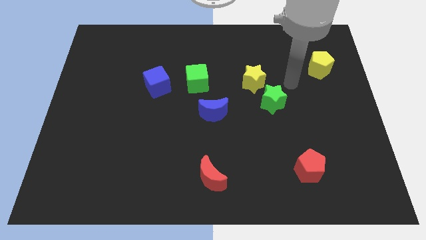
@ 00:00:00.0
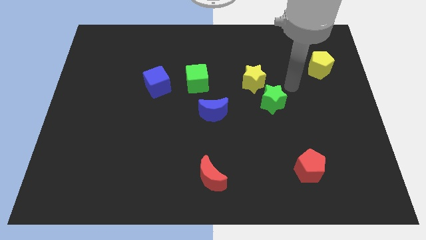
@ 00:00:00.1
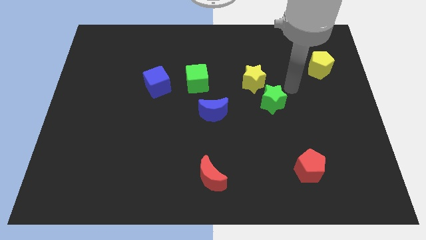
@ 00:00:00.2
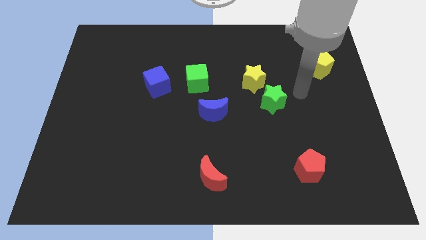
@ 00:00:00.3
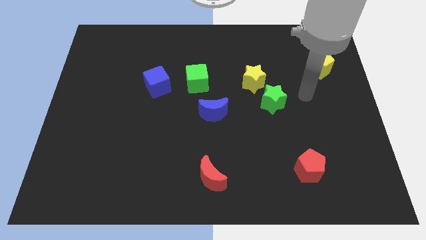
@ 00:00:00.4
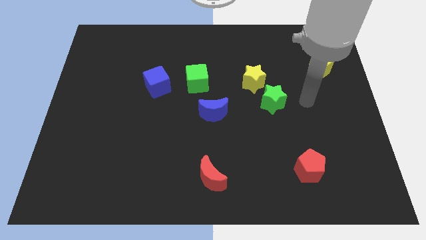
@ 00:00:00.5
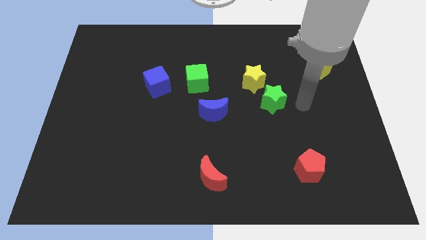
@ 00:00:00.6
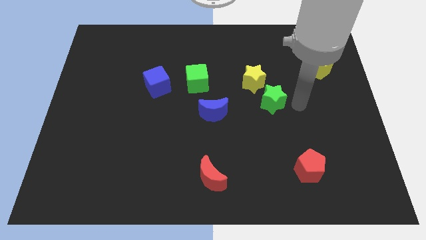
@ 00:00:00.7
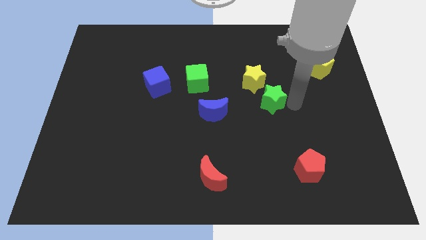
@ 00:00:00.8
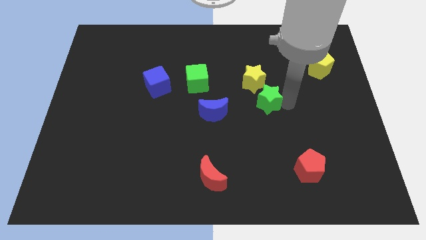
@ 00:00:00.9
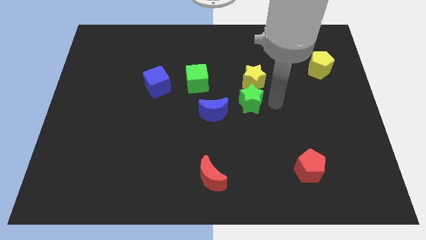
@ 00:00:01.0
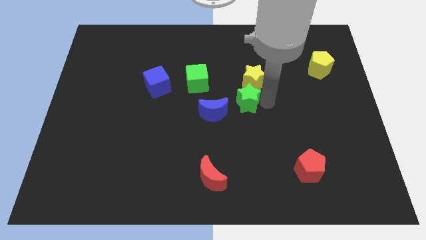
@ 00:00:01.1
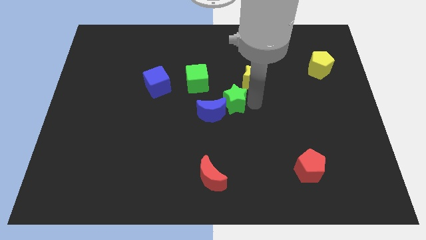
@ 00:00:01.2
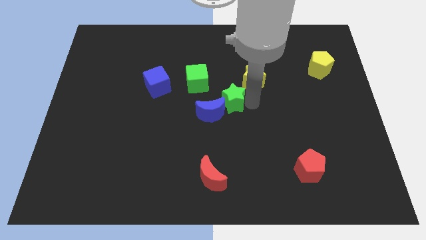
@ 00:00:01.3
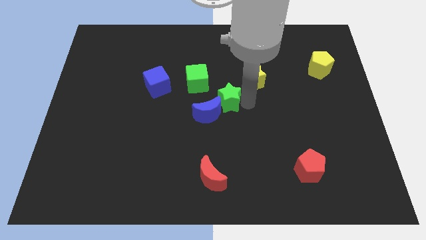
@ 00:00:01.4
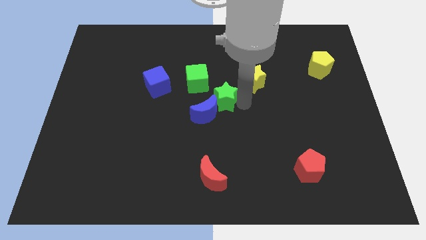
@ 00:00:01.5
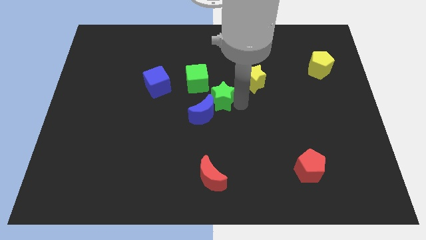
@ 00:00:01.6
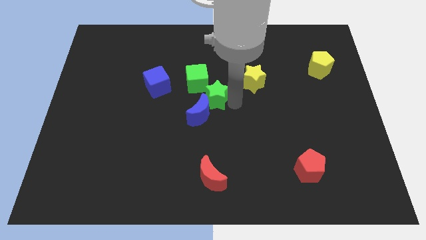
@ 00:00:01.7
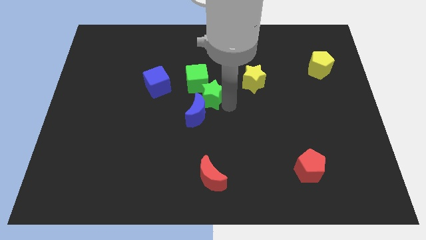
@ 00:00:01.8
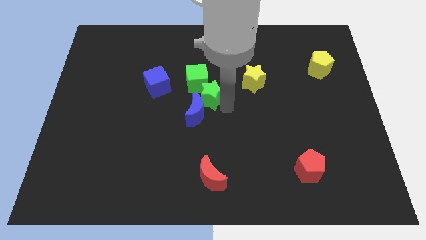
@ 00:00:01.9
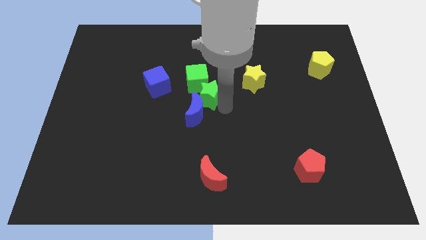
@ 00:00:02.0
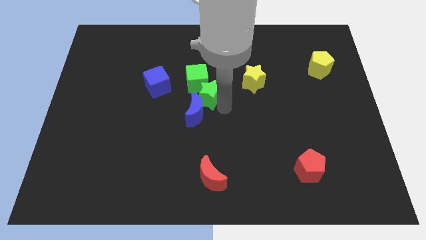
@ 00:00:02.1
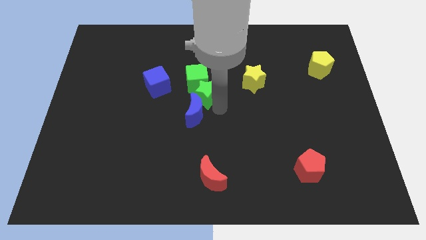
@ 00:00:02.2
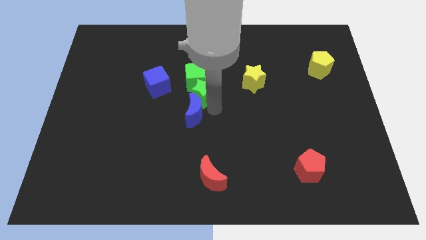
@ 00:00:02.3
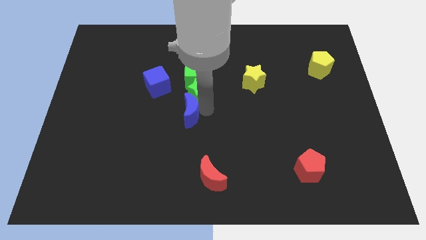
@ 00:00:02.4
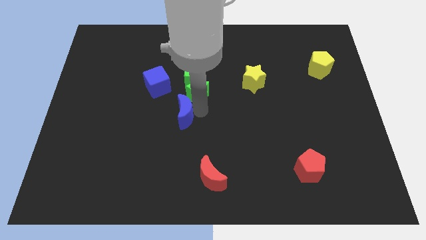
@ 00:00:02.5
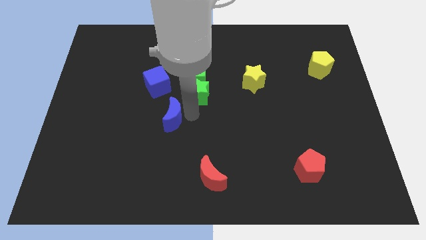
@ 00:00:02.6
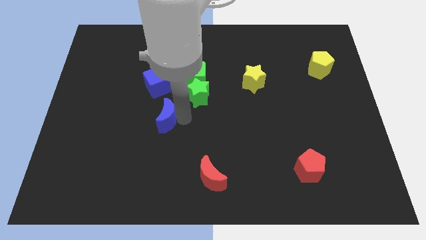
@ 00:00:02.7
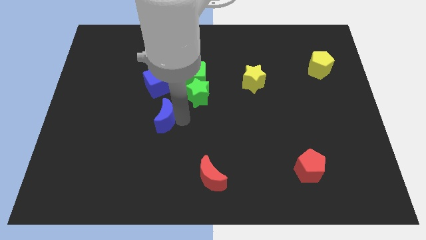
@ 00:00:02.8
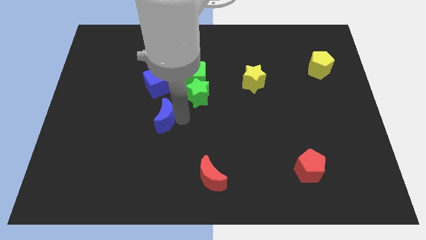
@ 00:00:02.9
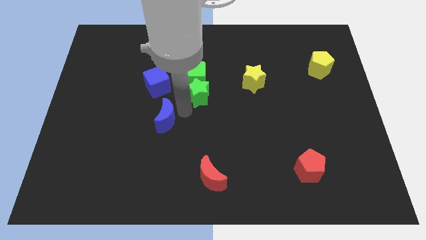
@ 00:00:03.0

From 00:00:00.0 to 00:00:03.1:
push green star below green cube

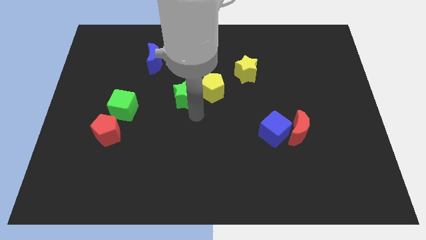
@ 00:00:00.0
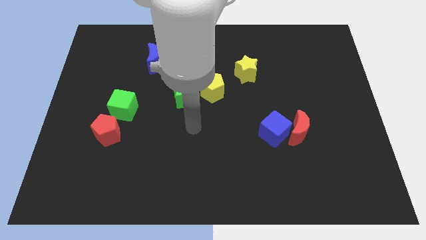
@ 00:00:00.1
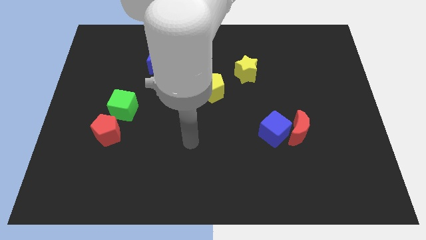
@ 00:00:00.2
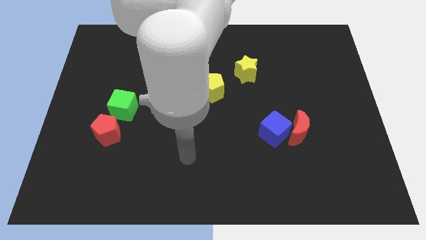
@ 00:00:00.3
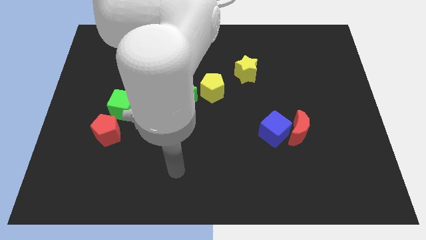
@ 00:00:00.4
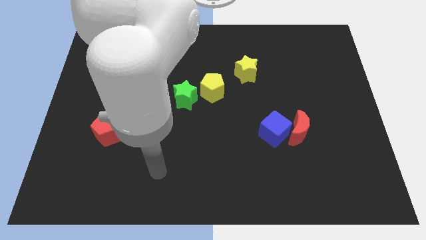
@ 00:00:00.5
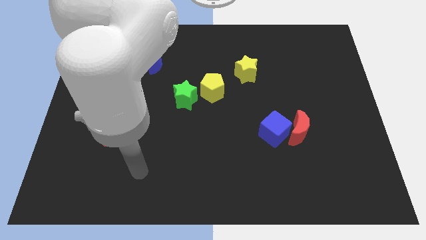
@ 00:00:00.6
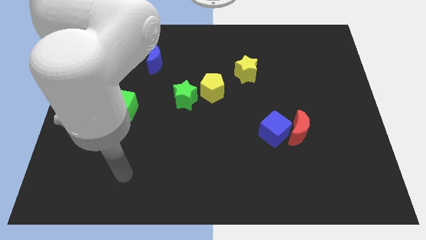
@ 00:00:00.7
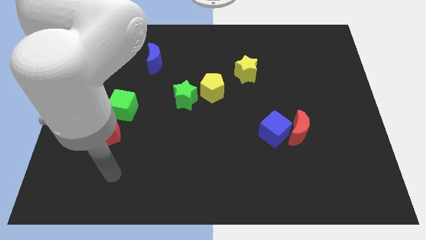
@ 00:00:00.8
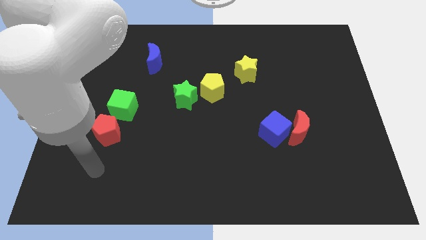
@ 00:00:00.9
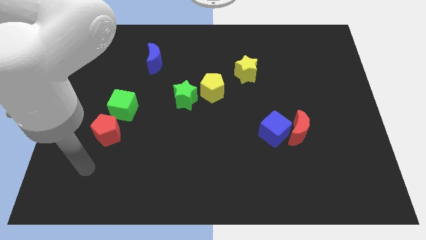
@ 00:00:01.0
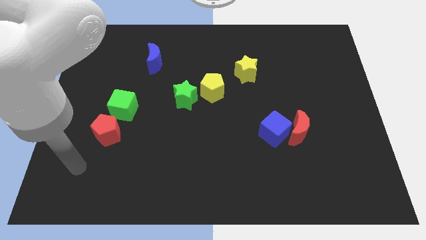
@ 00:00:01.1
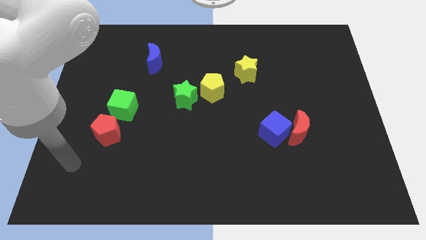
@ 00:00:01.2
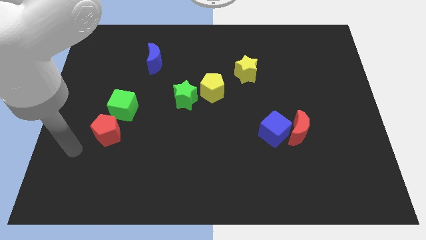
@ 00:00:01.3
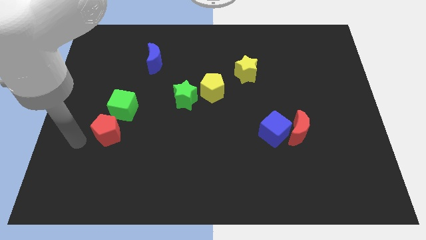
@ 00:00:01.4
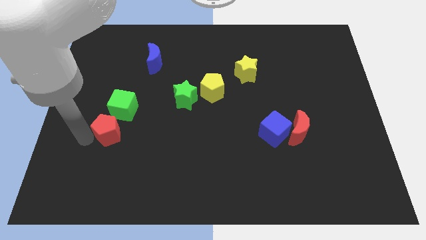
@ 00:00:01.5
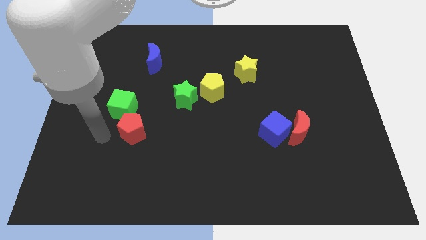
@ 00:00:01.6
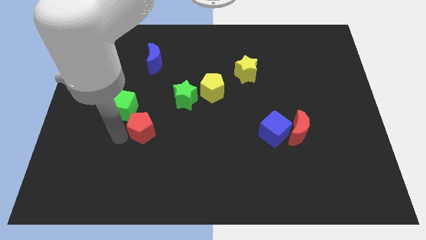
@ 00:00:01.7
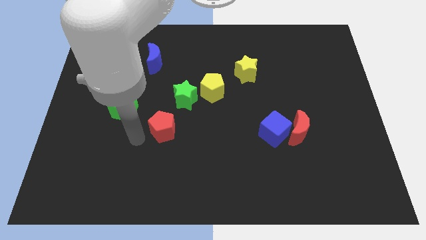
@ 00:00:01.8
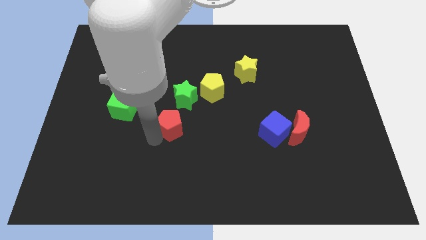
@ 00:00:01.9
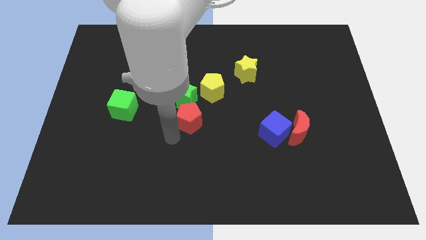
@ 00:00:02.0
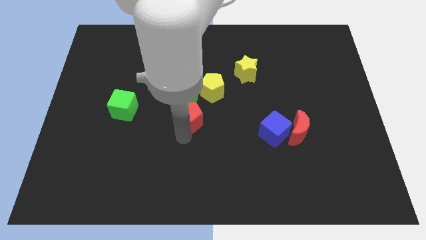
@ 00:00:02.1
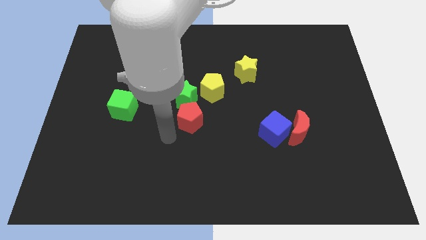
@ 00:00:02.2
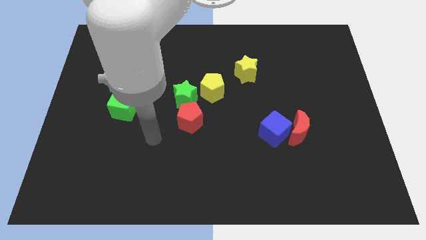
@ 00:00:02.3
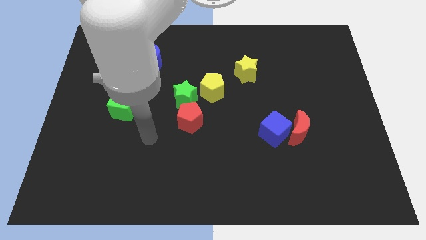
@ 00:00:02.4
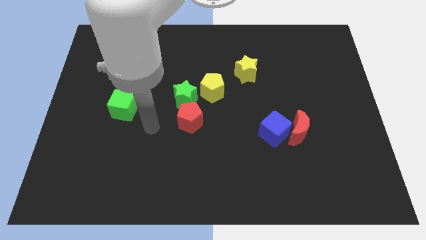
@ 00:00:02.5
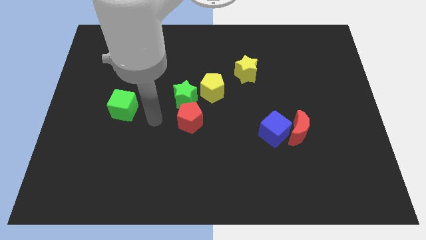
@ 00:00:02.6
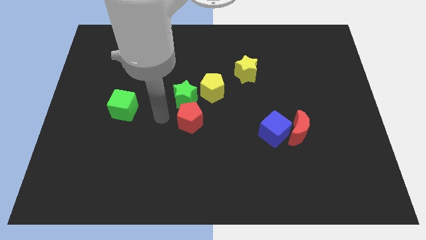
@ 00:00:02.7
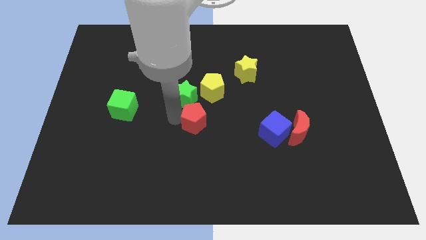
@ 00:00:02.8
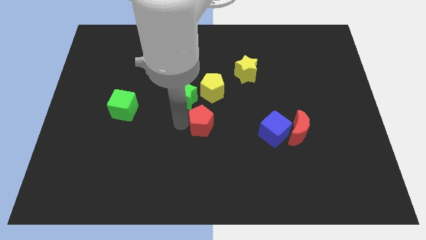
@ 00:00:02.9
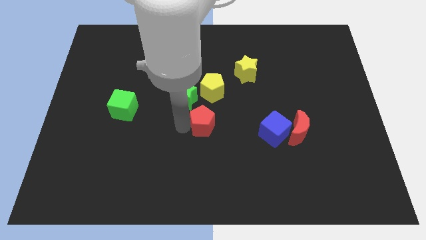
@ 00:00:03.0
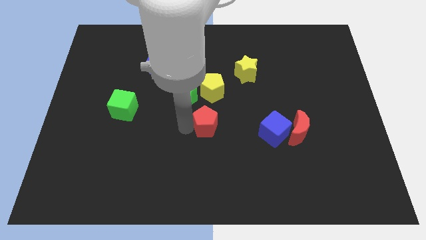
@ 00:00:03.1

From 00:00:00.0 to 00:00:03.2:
separate red pentagon and the green cube

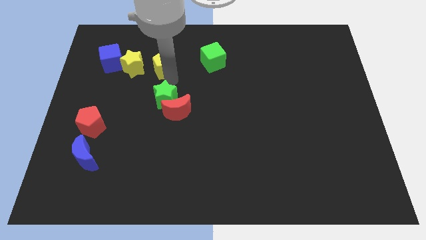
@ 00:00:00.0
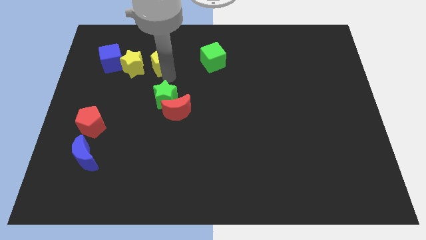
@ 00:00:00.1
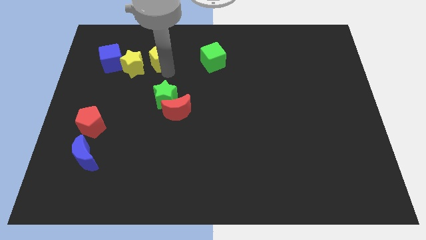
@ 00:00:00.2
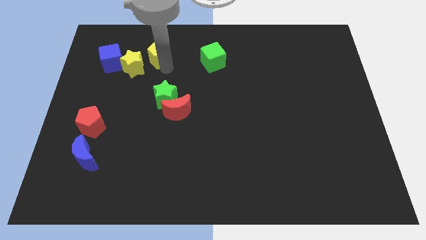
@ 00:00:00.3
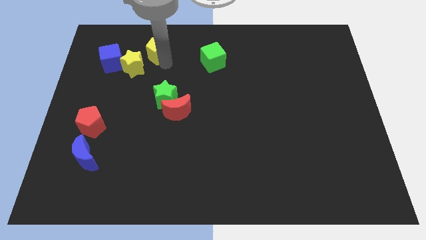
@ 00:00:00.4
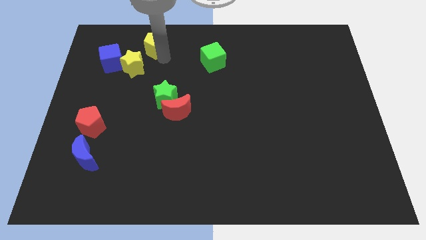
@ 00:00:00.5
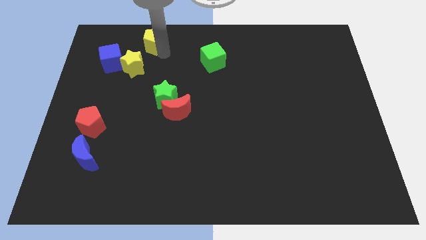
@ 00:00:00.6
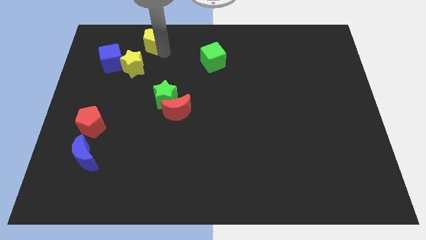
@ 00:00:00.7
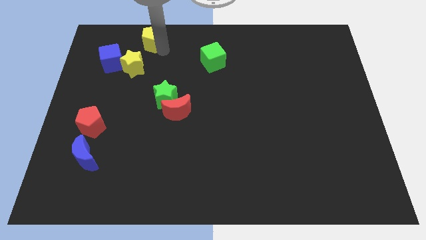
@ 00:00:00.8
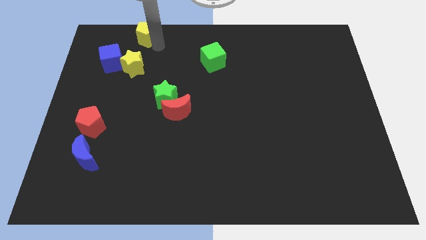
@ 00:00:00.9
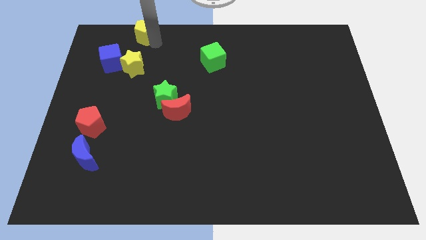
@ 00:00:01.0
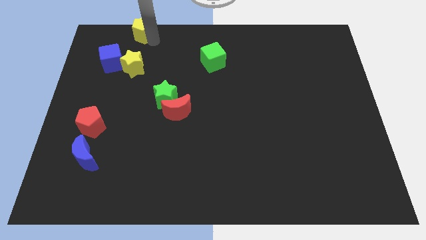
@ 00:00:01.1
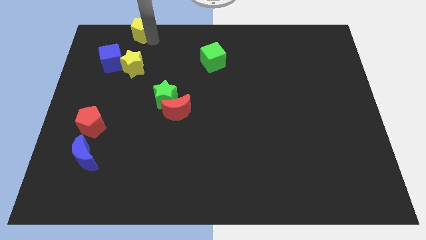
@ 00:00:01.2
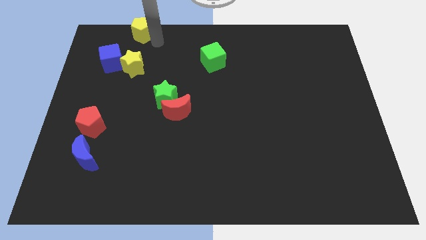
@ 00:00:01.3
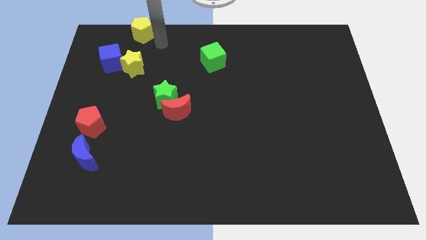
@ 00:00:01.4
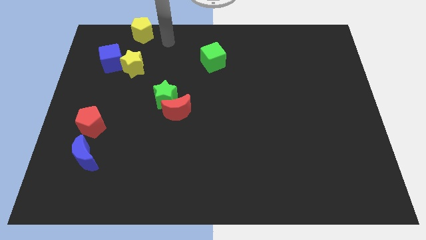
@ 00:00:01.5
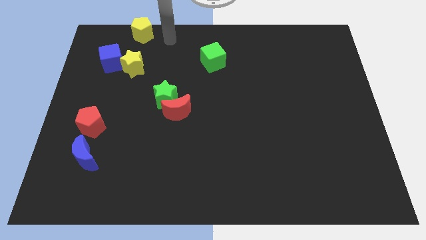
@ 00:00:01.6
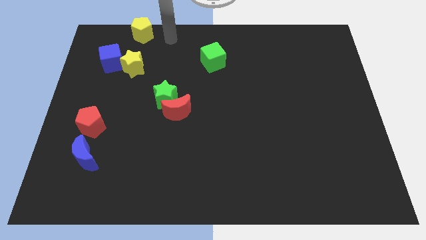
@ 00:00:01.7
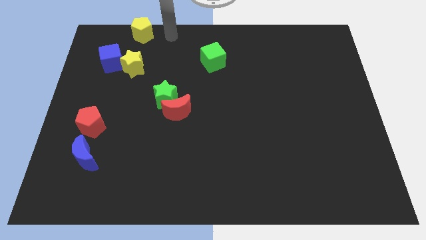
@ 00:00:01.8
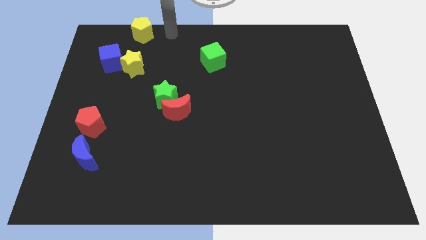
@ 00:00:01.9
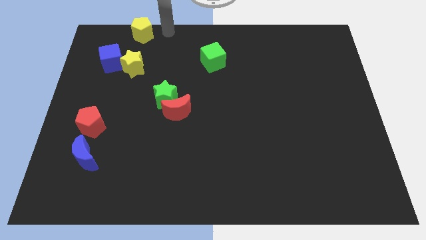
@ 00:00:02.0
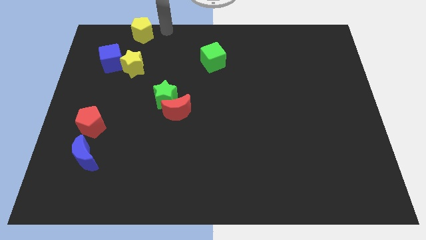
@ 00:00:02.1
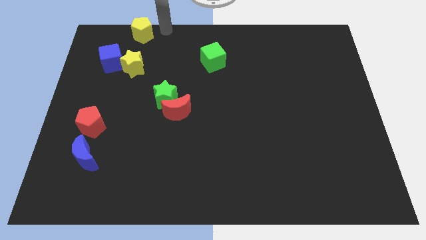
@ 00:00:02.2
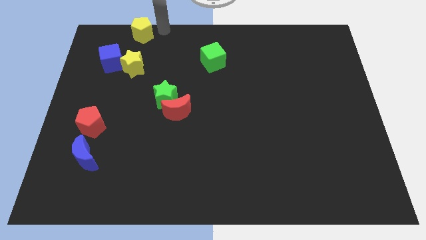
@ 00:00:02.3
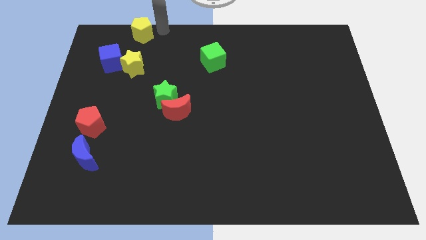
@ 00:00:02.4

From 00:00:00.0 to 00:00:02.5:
move the yellow pentagon to the top left side

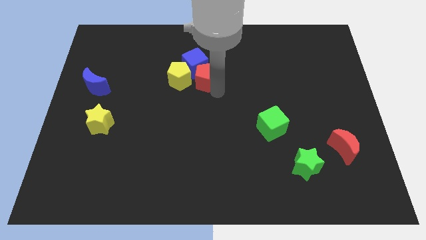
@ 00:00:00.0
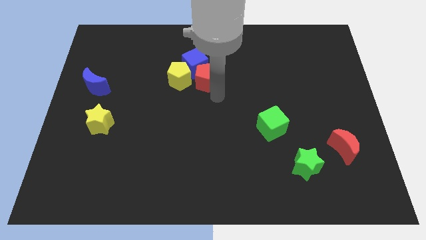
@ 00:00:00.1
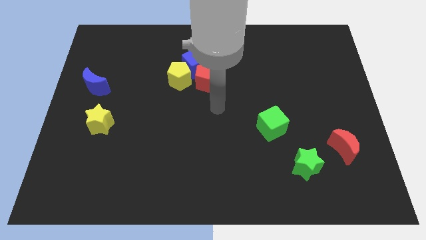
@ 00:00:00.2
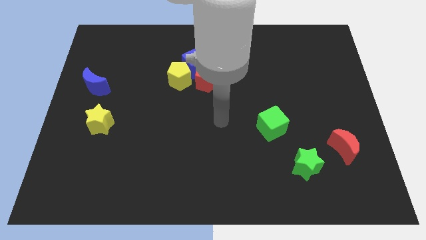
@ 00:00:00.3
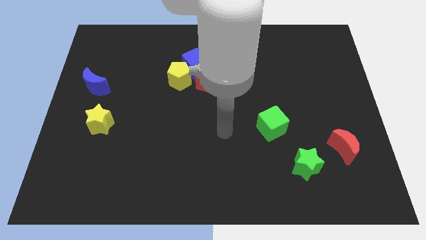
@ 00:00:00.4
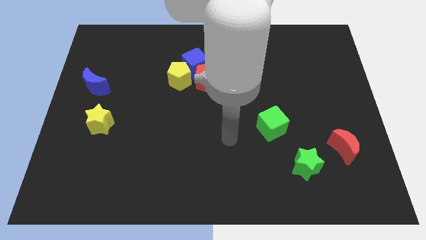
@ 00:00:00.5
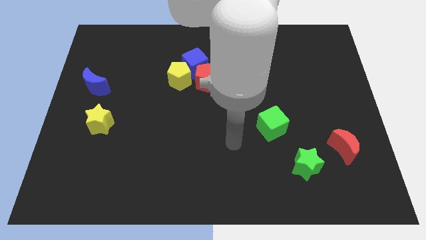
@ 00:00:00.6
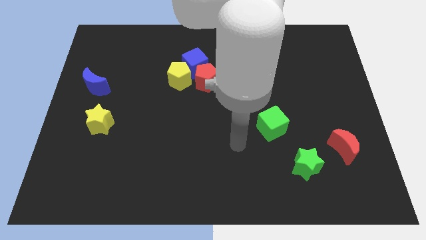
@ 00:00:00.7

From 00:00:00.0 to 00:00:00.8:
move your arm away from red pentagon
